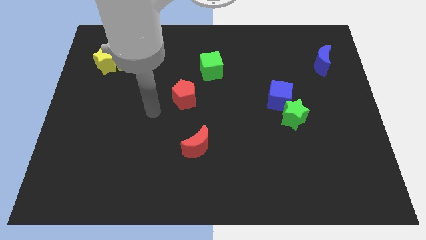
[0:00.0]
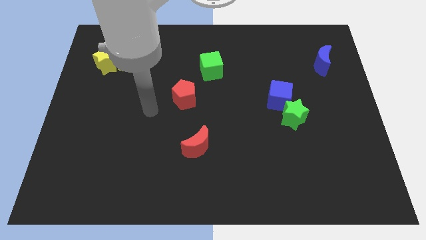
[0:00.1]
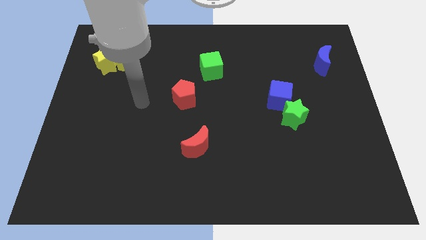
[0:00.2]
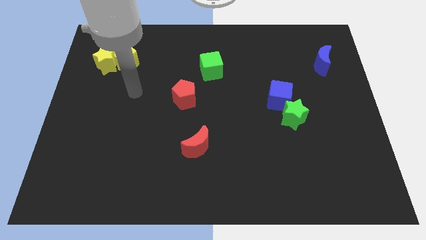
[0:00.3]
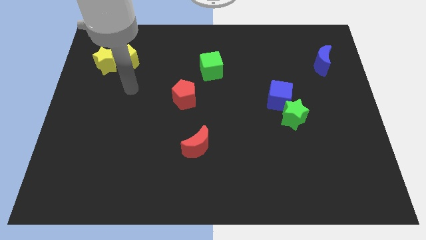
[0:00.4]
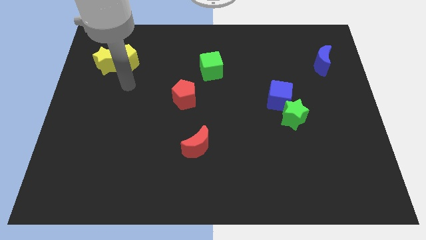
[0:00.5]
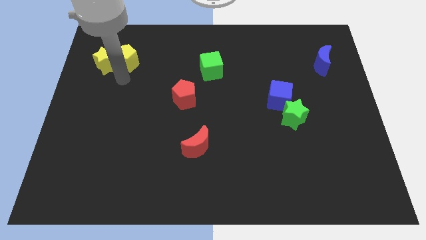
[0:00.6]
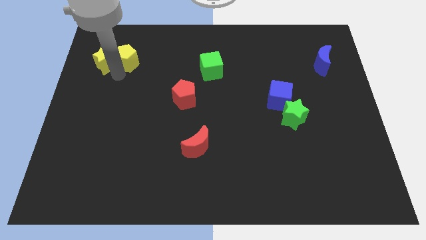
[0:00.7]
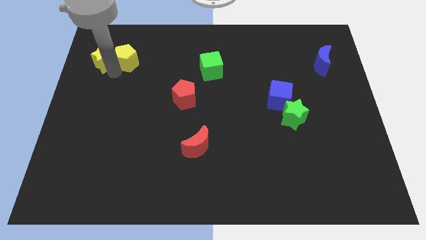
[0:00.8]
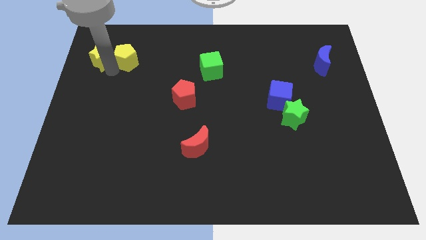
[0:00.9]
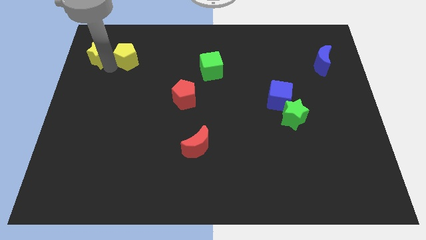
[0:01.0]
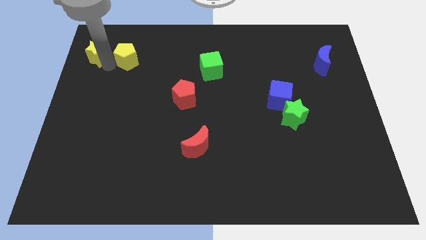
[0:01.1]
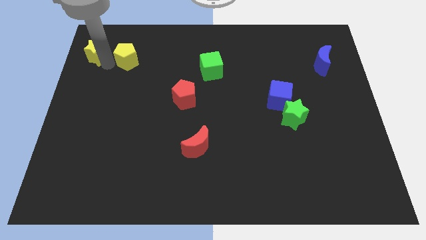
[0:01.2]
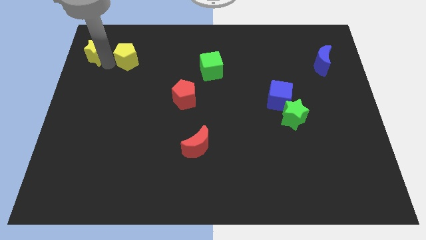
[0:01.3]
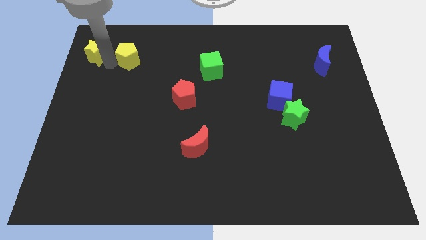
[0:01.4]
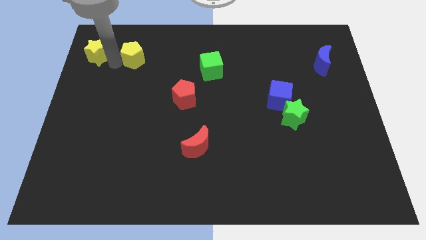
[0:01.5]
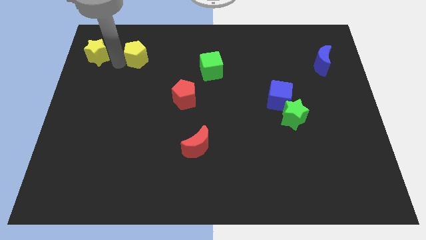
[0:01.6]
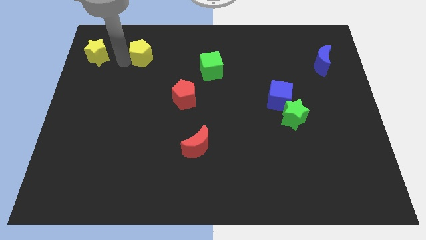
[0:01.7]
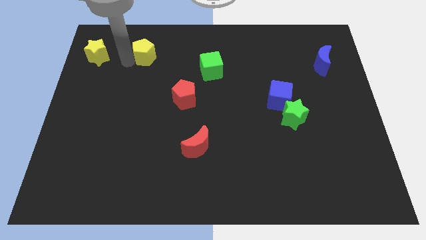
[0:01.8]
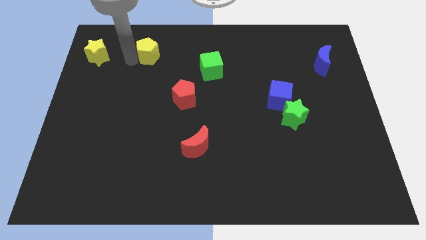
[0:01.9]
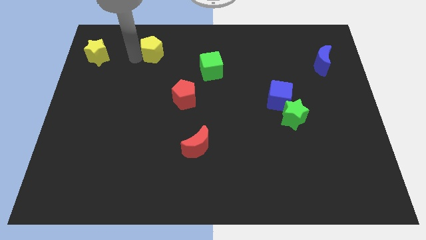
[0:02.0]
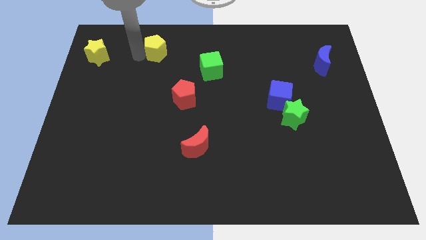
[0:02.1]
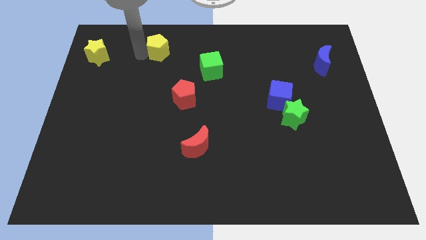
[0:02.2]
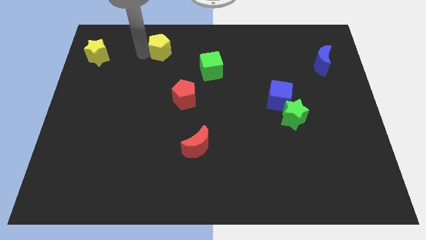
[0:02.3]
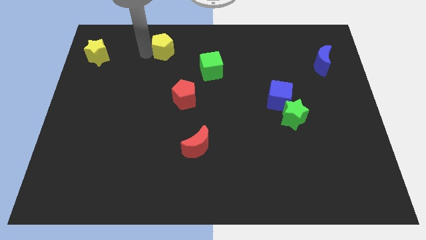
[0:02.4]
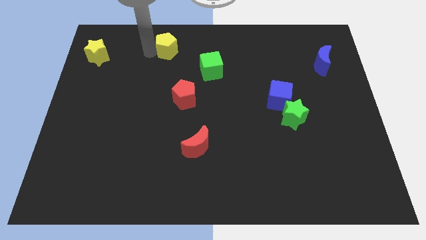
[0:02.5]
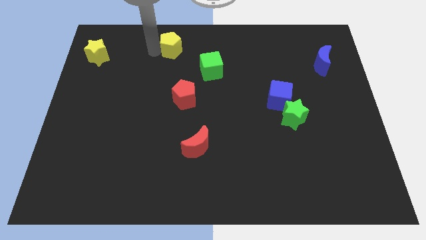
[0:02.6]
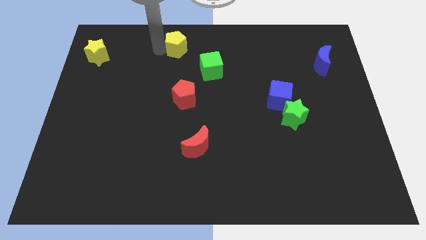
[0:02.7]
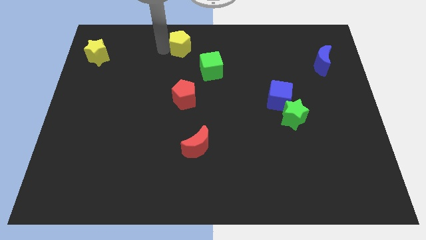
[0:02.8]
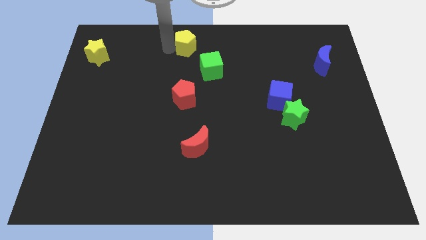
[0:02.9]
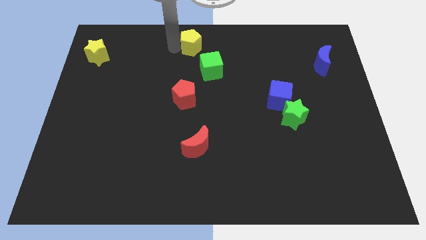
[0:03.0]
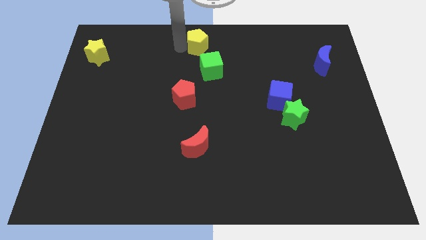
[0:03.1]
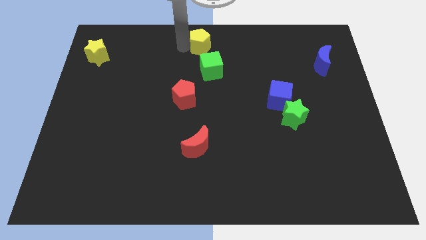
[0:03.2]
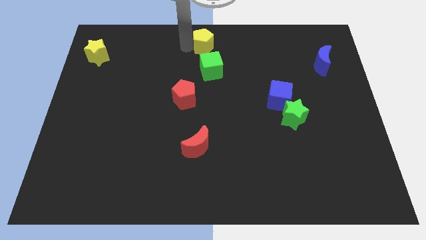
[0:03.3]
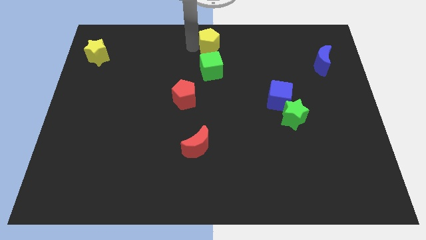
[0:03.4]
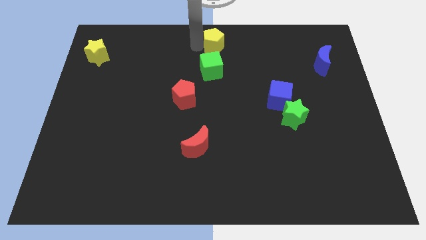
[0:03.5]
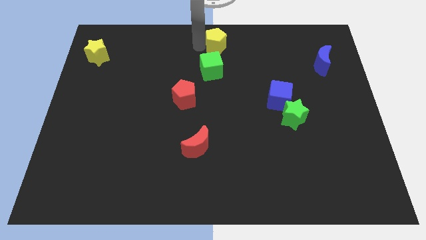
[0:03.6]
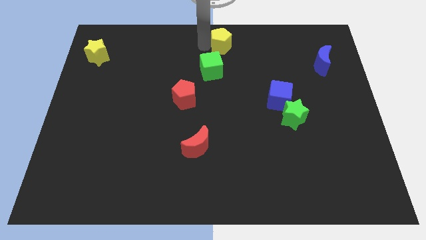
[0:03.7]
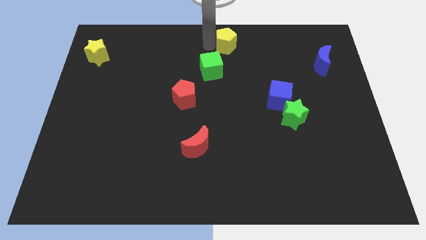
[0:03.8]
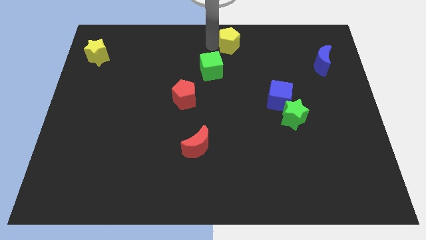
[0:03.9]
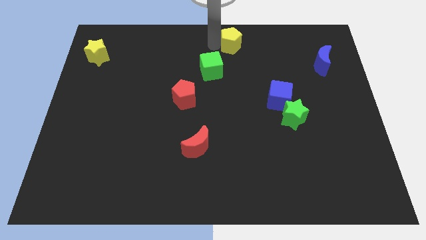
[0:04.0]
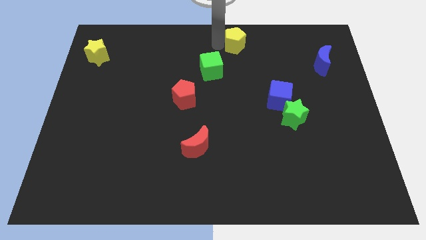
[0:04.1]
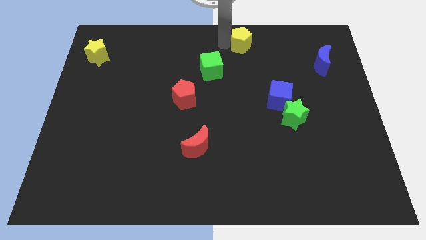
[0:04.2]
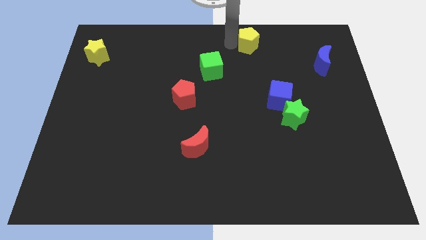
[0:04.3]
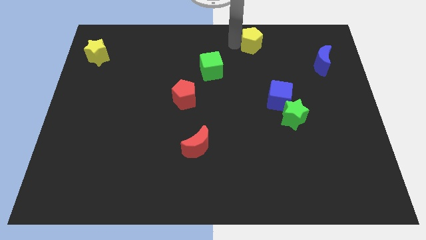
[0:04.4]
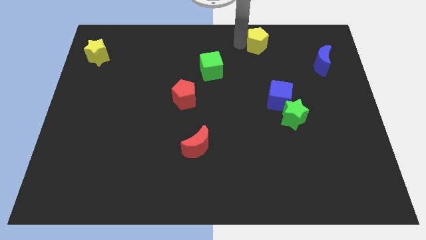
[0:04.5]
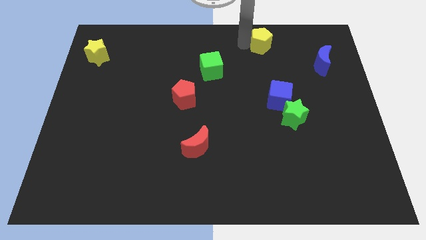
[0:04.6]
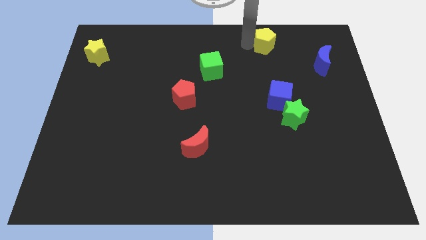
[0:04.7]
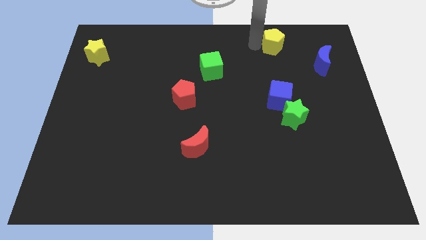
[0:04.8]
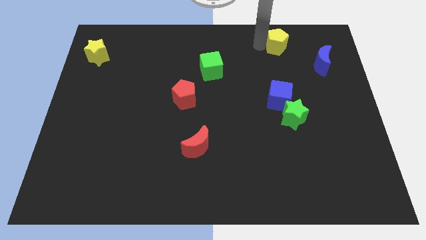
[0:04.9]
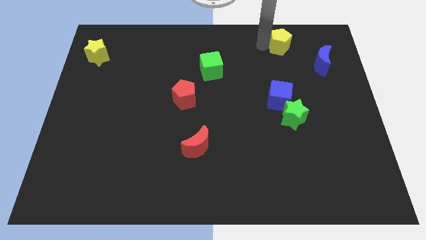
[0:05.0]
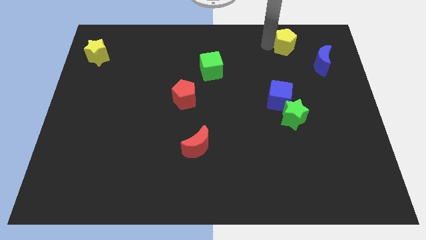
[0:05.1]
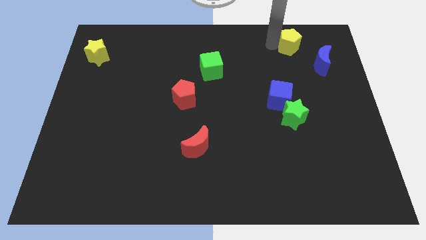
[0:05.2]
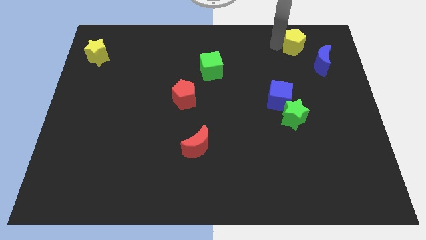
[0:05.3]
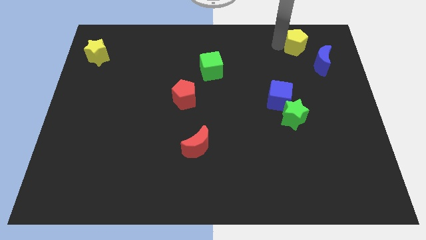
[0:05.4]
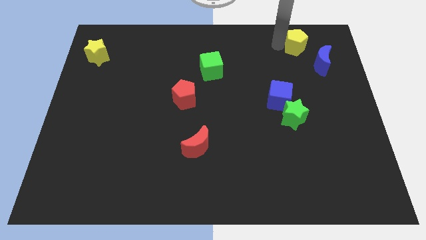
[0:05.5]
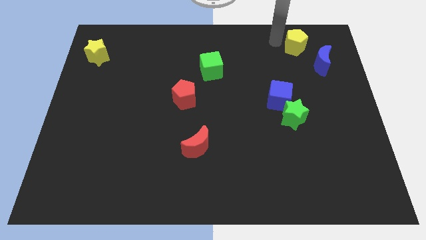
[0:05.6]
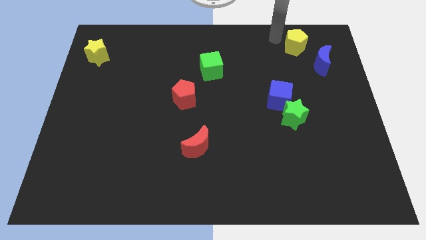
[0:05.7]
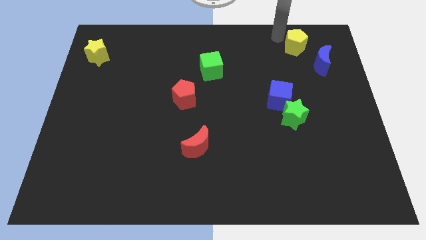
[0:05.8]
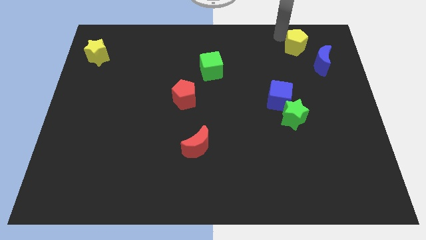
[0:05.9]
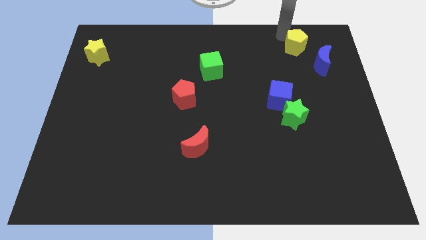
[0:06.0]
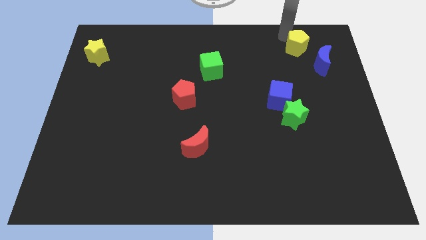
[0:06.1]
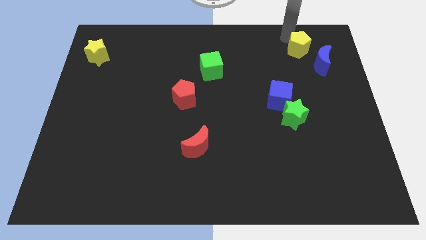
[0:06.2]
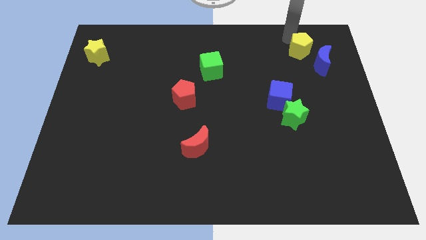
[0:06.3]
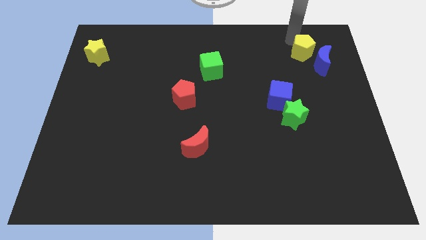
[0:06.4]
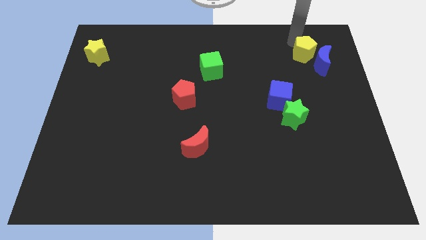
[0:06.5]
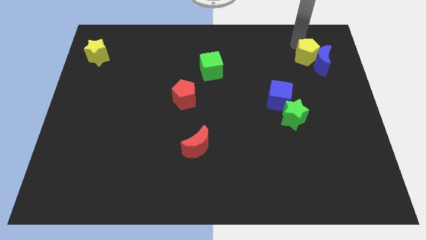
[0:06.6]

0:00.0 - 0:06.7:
push the yellow pentagon close to the blue moon

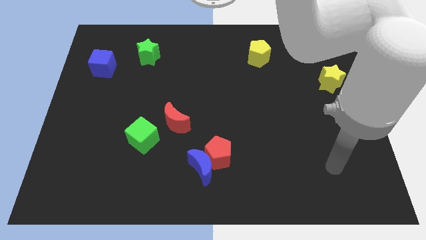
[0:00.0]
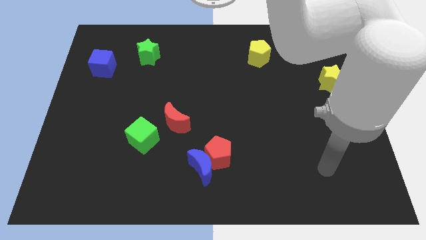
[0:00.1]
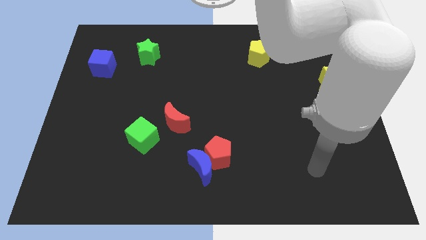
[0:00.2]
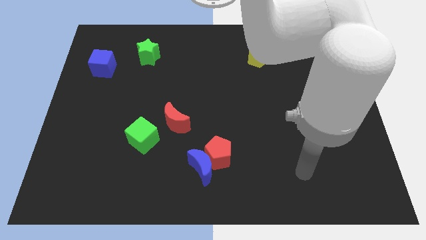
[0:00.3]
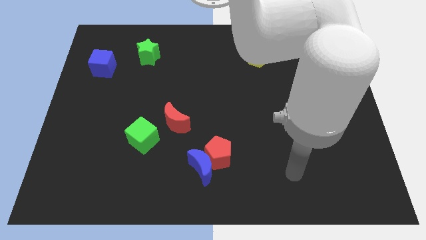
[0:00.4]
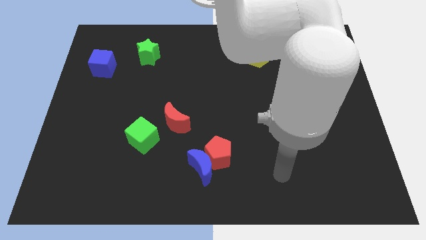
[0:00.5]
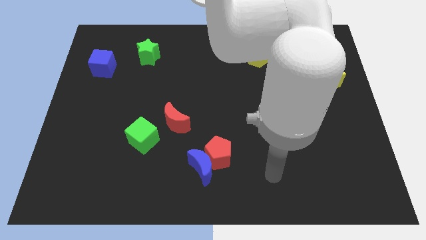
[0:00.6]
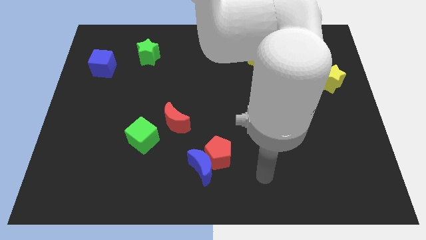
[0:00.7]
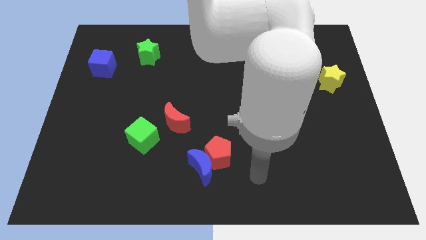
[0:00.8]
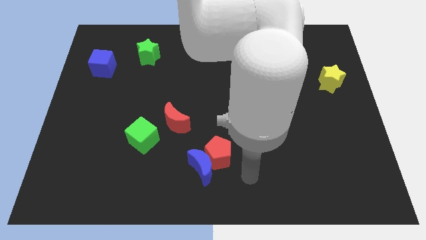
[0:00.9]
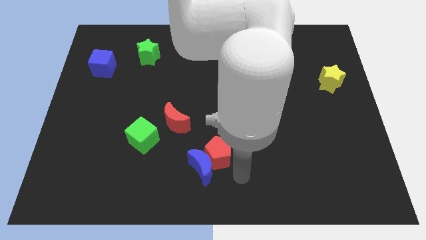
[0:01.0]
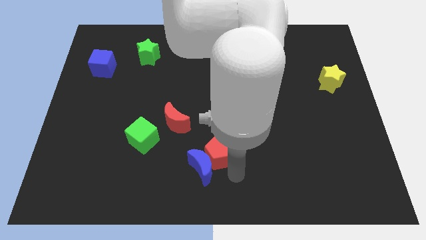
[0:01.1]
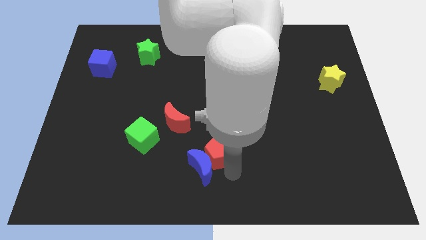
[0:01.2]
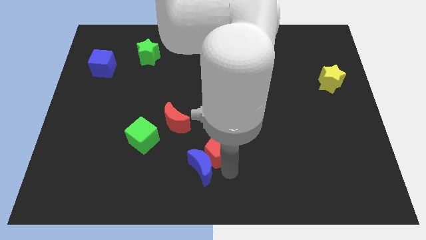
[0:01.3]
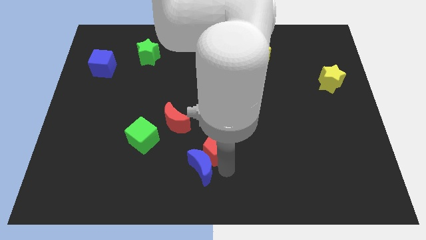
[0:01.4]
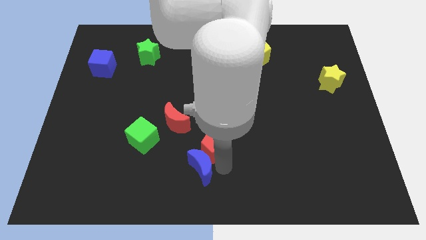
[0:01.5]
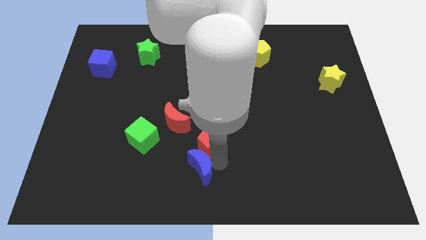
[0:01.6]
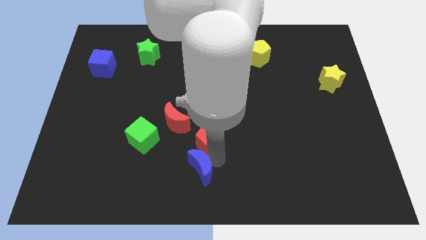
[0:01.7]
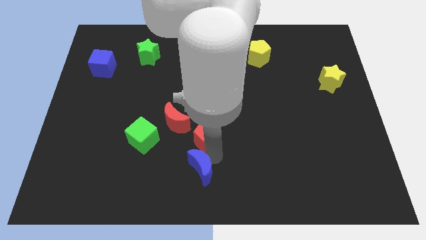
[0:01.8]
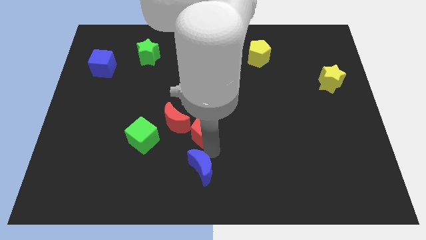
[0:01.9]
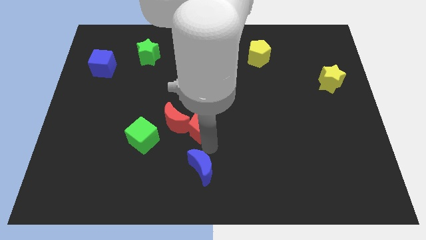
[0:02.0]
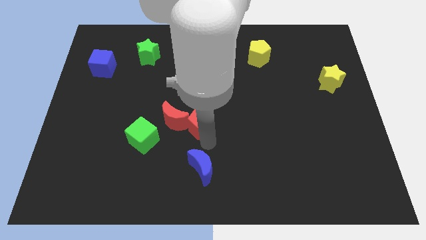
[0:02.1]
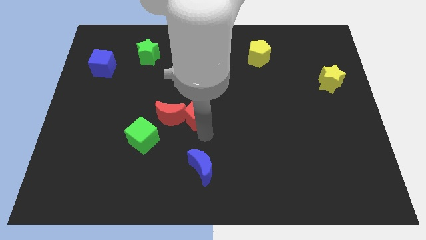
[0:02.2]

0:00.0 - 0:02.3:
push the red pentagon to the red moon
